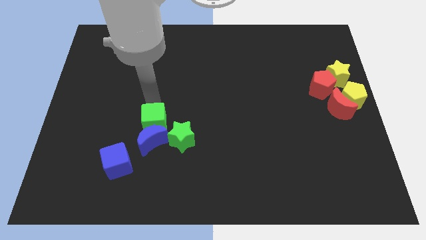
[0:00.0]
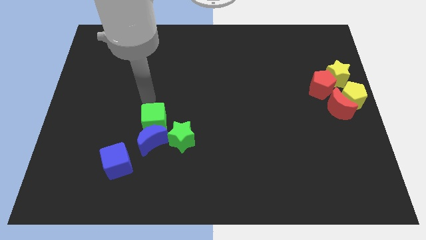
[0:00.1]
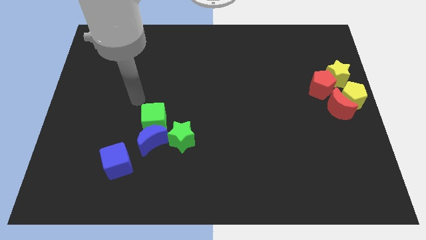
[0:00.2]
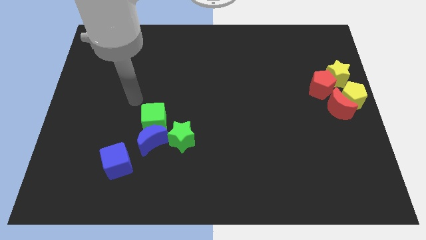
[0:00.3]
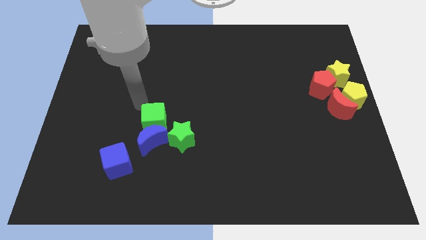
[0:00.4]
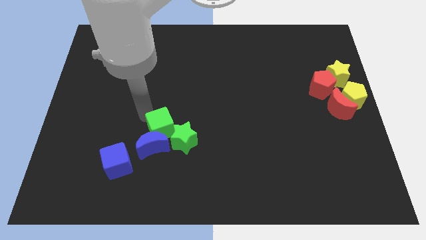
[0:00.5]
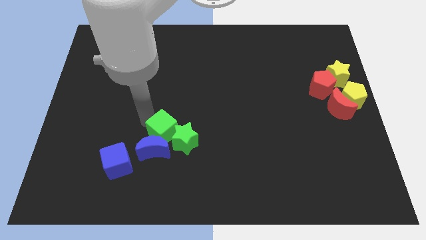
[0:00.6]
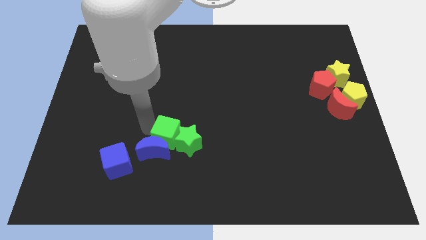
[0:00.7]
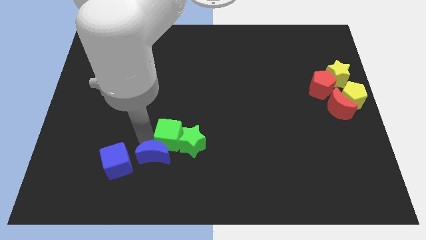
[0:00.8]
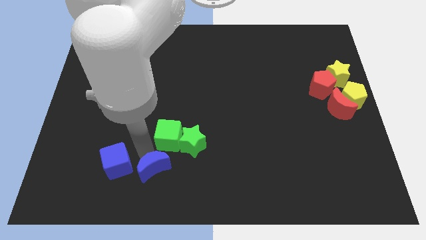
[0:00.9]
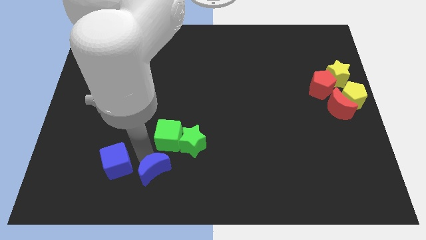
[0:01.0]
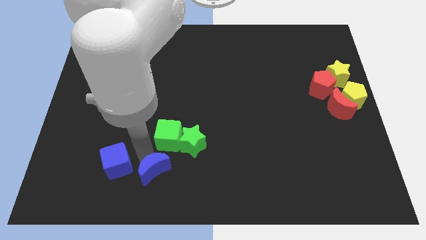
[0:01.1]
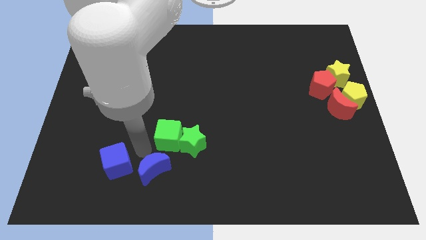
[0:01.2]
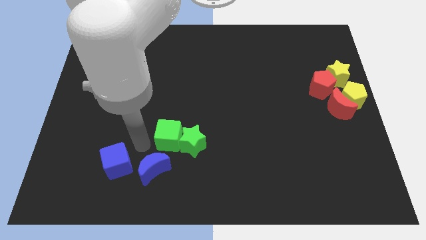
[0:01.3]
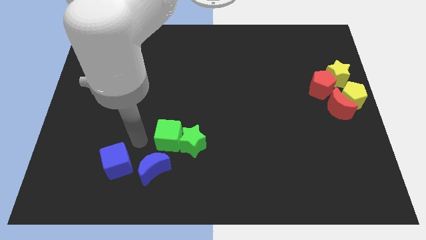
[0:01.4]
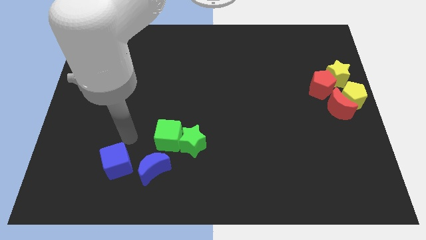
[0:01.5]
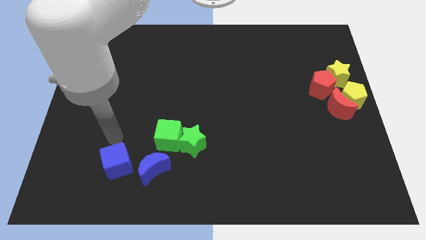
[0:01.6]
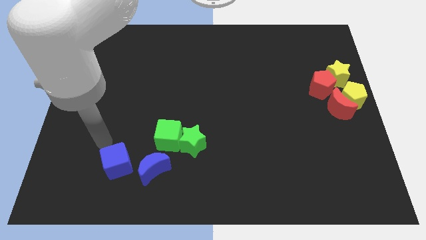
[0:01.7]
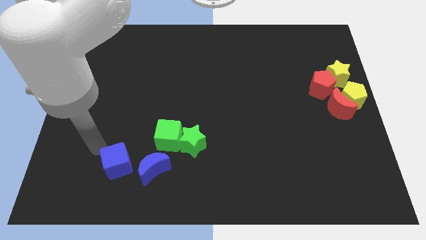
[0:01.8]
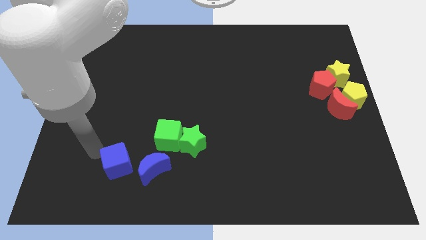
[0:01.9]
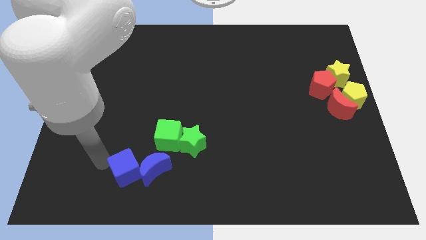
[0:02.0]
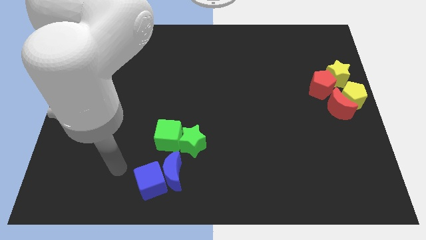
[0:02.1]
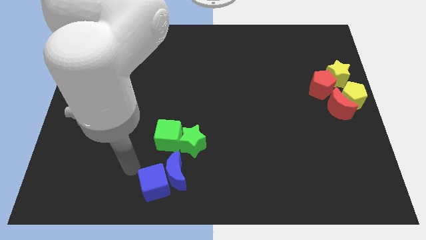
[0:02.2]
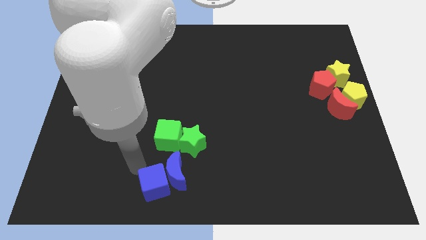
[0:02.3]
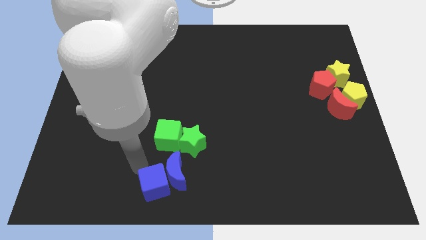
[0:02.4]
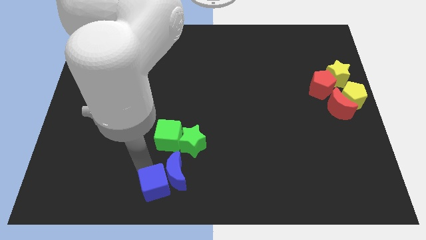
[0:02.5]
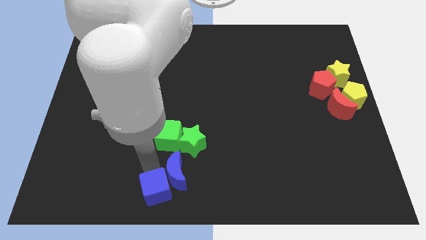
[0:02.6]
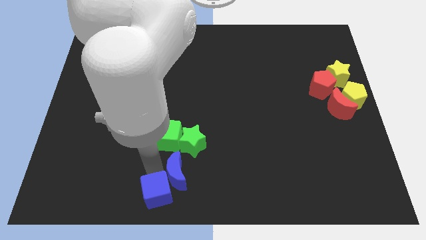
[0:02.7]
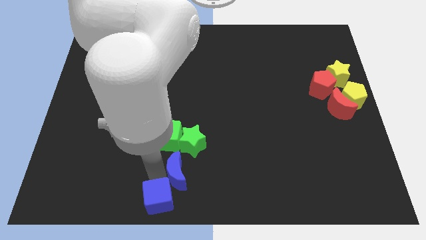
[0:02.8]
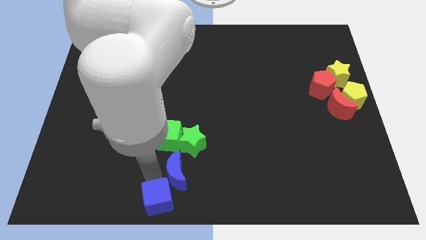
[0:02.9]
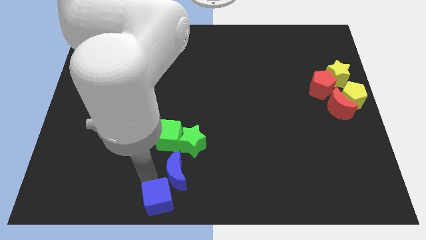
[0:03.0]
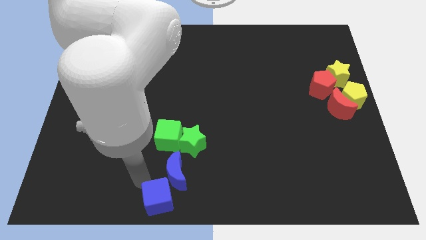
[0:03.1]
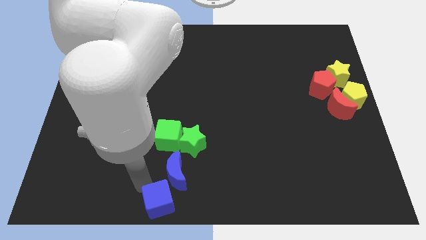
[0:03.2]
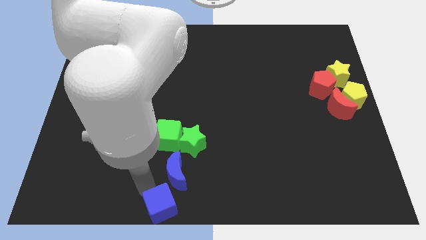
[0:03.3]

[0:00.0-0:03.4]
slide the blue cube towards the bottom right side of the board

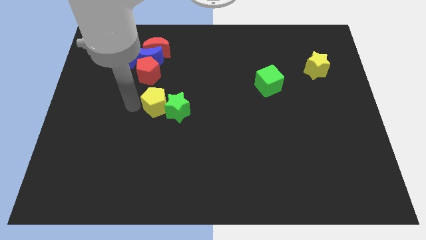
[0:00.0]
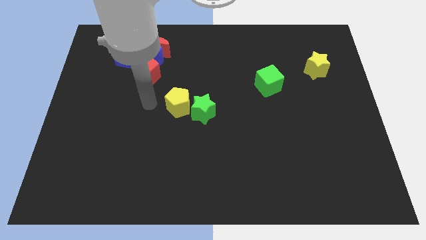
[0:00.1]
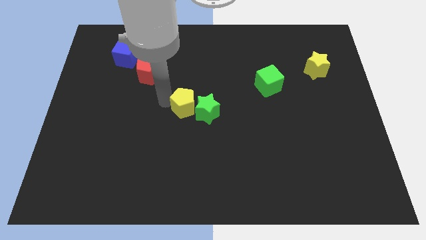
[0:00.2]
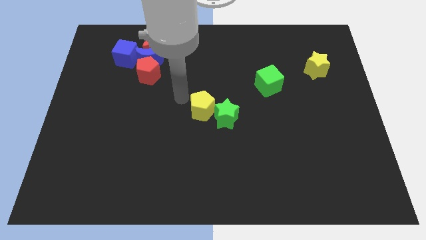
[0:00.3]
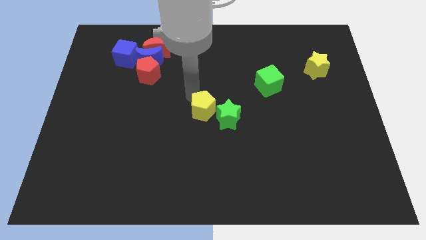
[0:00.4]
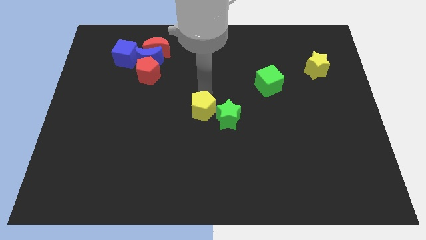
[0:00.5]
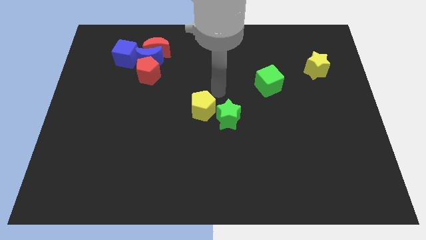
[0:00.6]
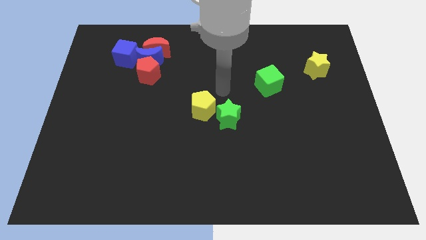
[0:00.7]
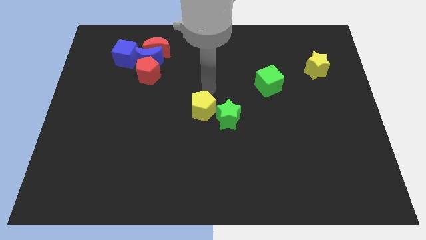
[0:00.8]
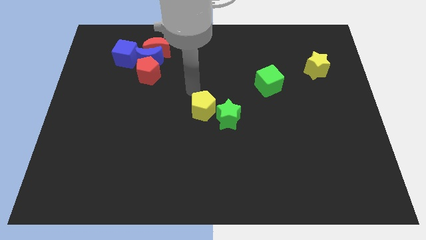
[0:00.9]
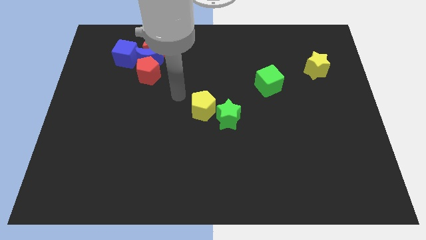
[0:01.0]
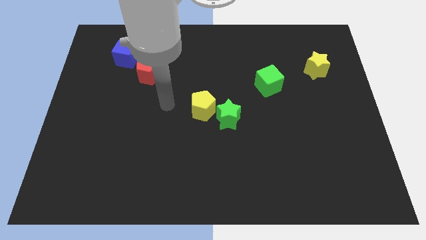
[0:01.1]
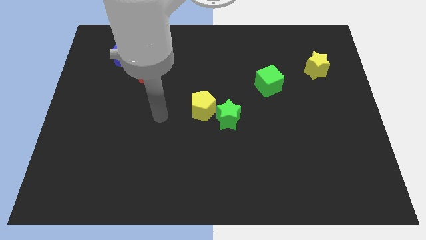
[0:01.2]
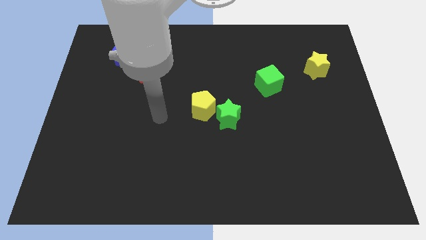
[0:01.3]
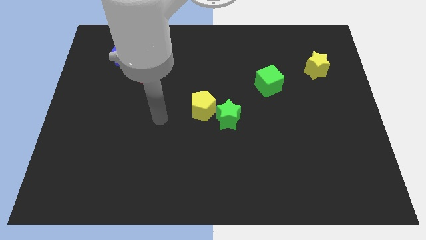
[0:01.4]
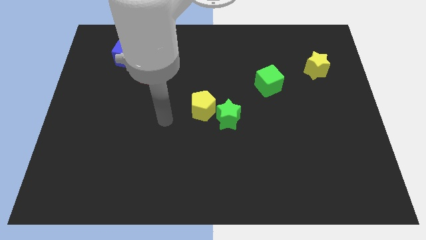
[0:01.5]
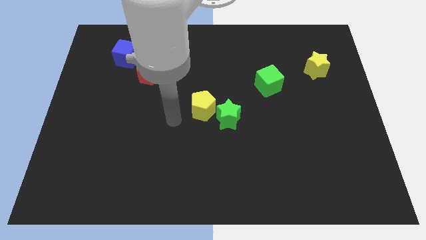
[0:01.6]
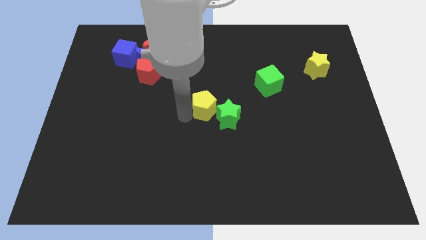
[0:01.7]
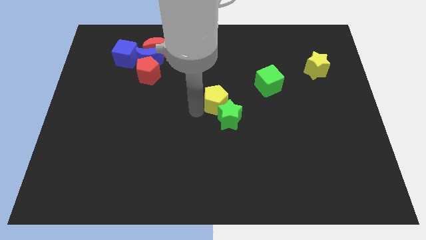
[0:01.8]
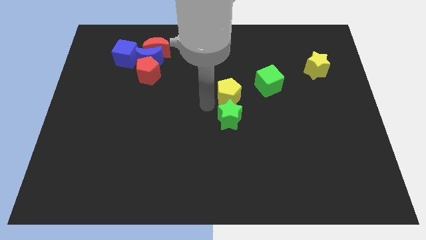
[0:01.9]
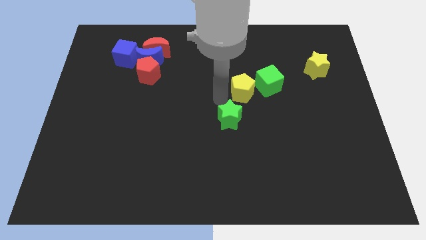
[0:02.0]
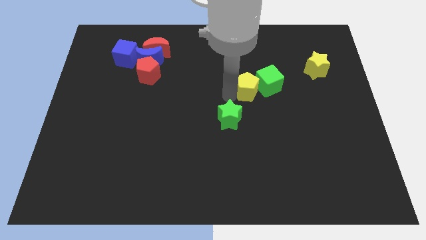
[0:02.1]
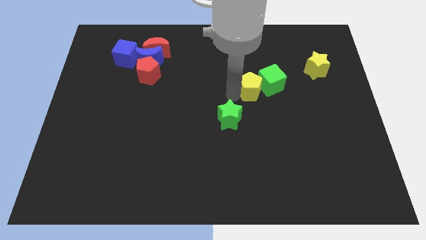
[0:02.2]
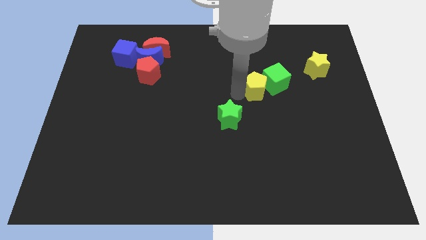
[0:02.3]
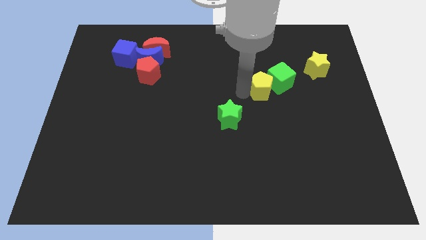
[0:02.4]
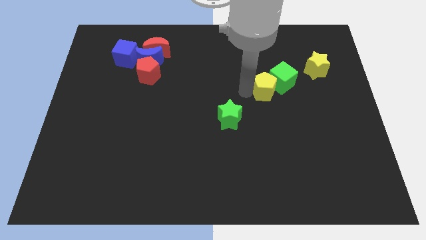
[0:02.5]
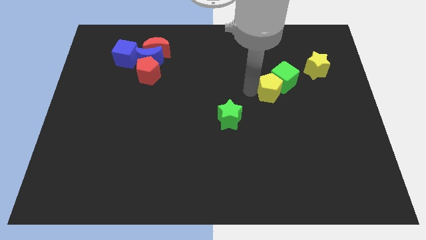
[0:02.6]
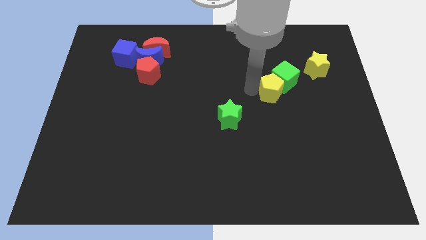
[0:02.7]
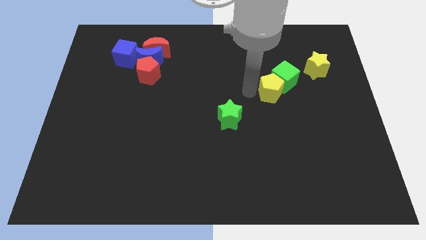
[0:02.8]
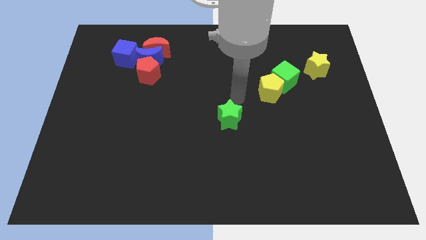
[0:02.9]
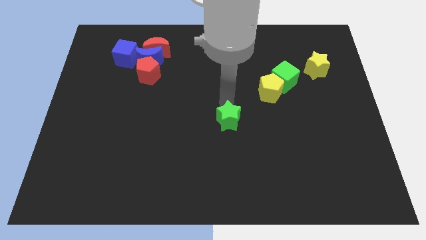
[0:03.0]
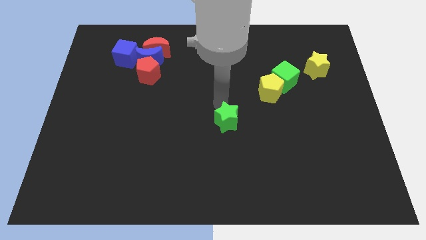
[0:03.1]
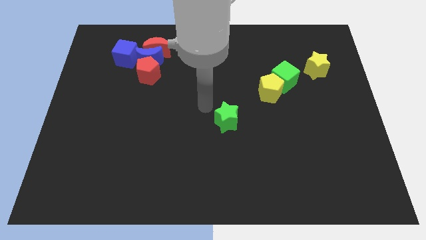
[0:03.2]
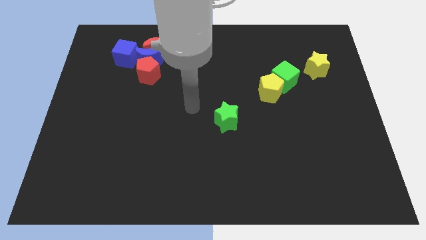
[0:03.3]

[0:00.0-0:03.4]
push yellow pentagon in to green star

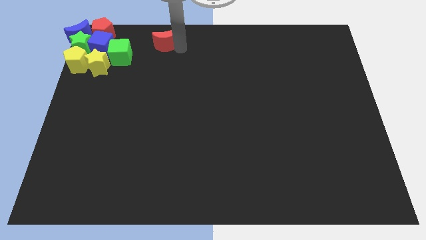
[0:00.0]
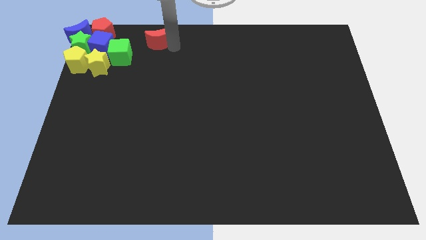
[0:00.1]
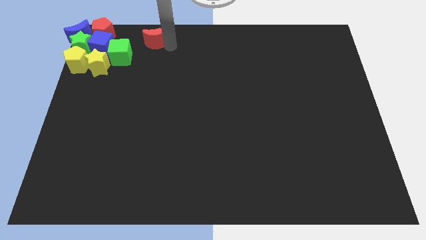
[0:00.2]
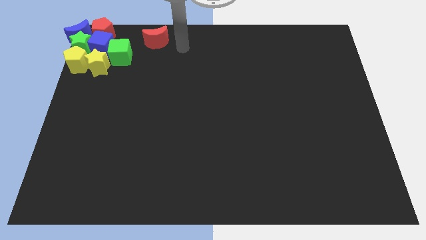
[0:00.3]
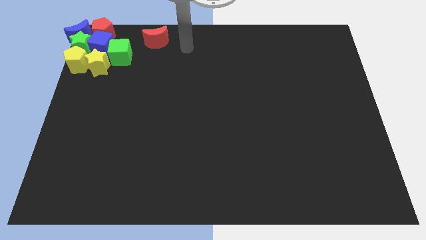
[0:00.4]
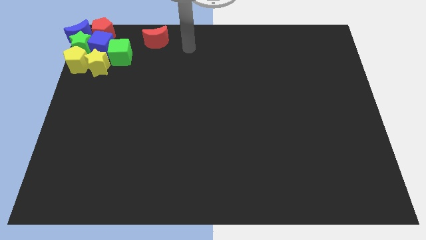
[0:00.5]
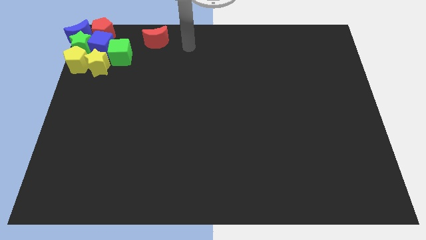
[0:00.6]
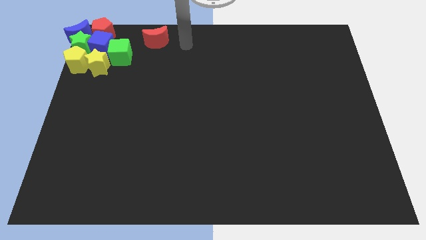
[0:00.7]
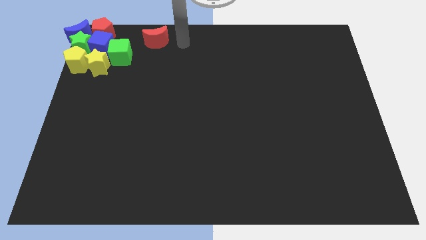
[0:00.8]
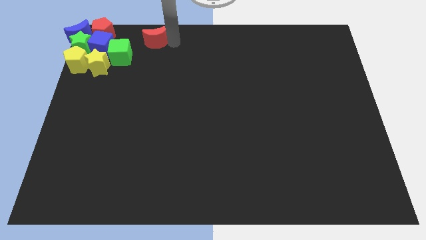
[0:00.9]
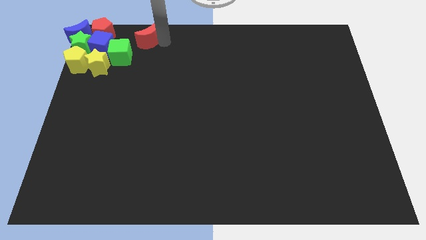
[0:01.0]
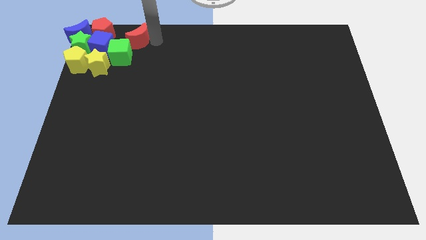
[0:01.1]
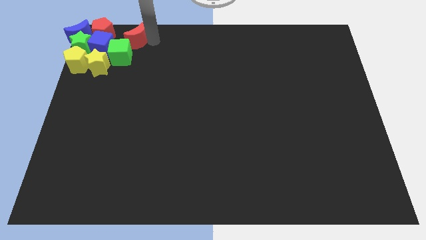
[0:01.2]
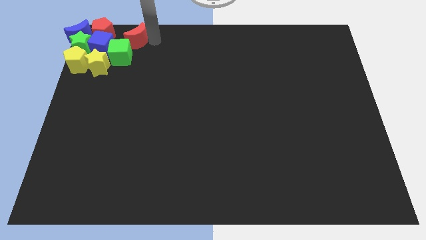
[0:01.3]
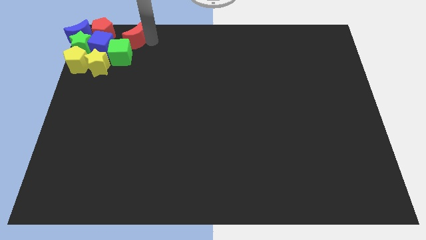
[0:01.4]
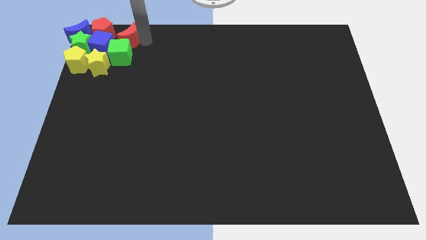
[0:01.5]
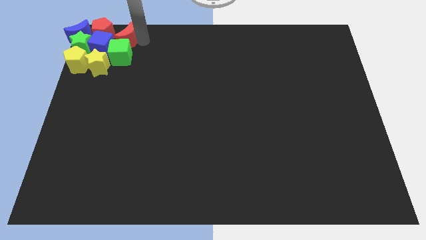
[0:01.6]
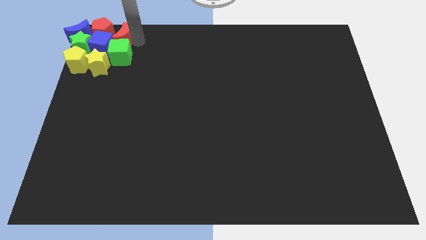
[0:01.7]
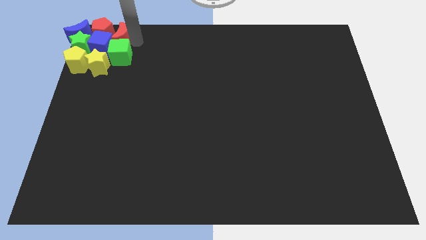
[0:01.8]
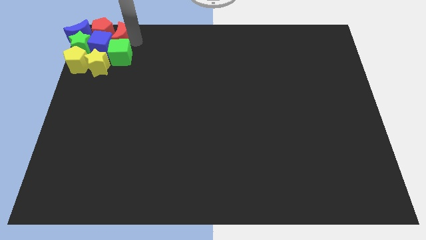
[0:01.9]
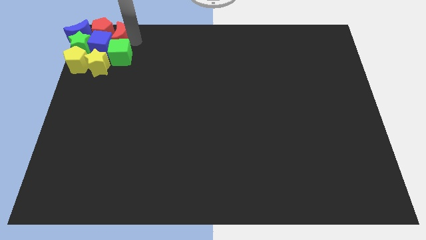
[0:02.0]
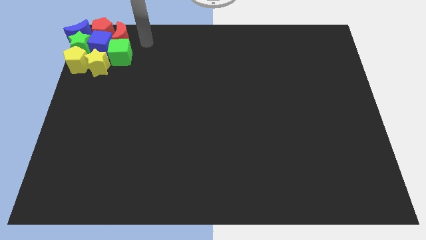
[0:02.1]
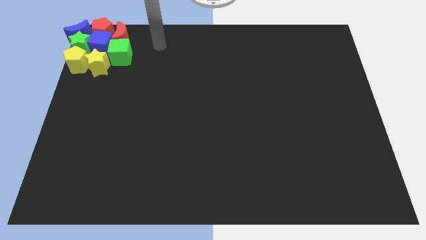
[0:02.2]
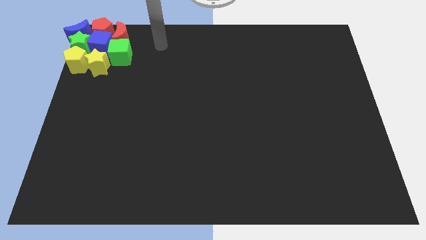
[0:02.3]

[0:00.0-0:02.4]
move the red crescent to the right side of the red pentagon
